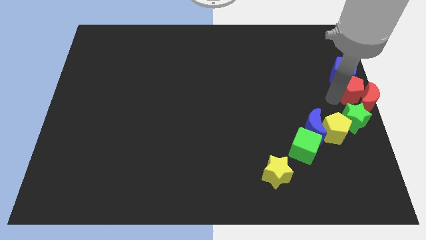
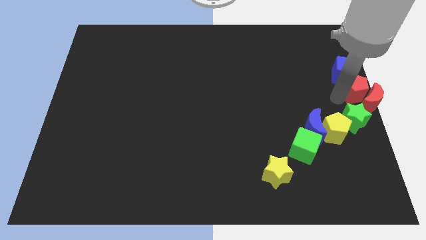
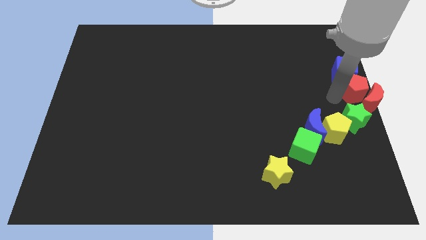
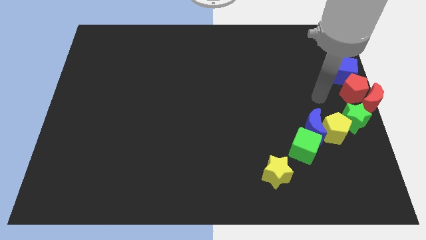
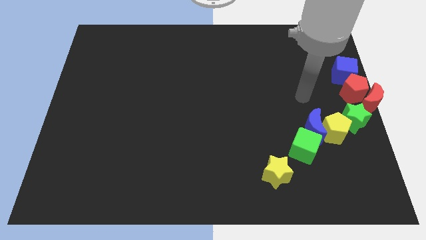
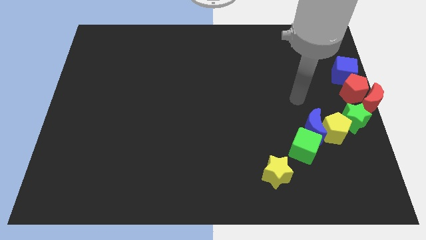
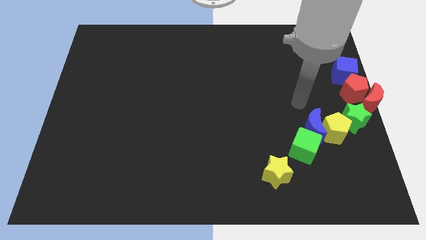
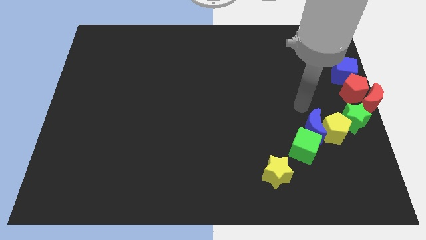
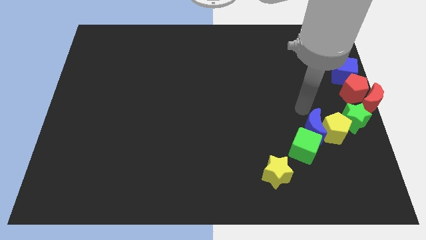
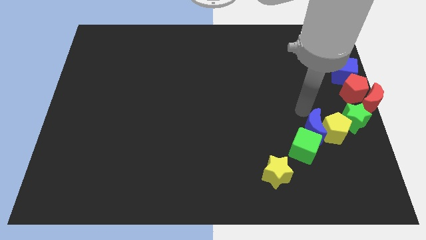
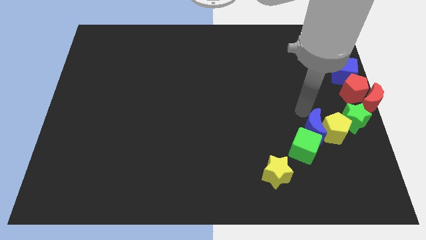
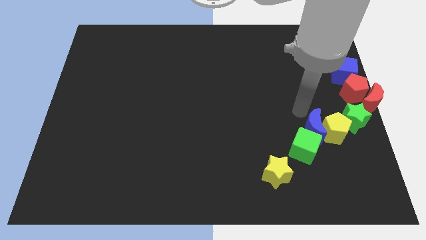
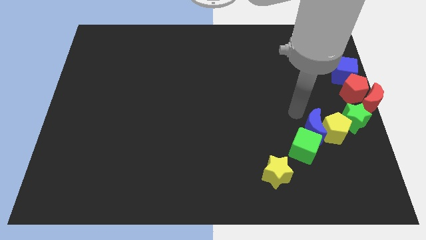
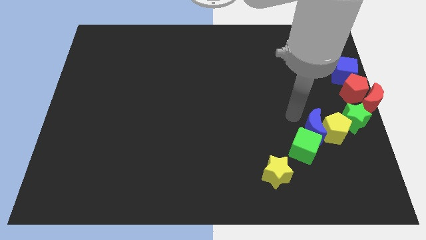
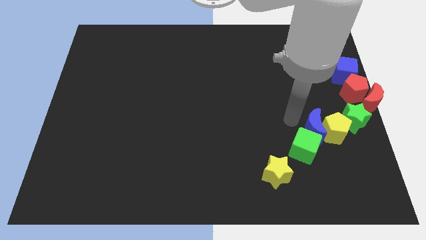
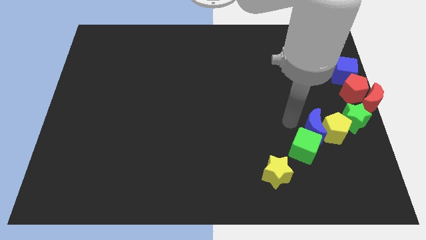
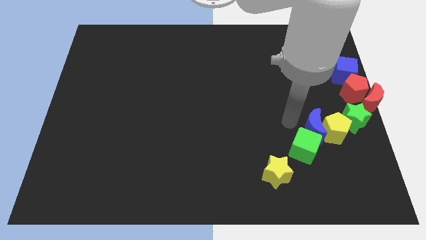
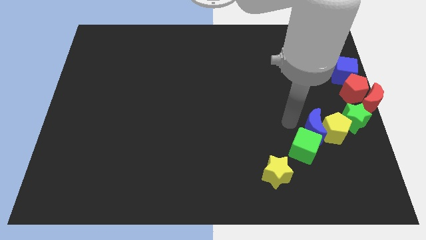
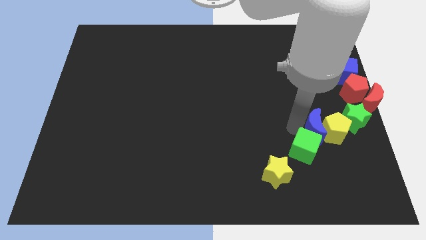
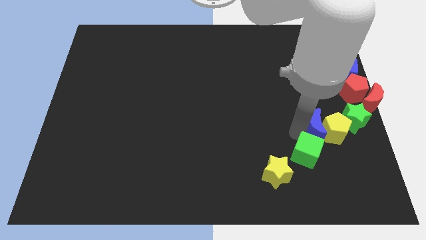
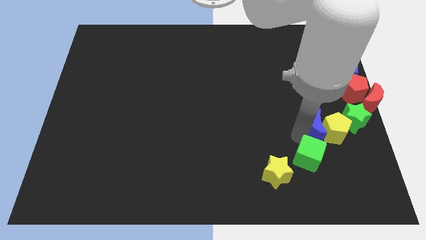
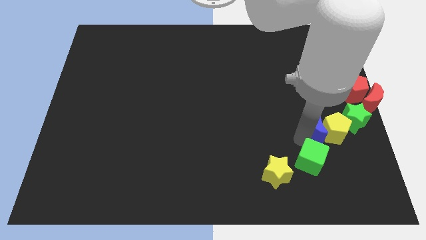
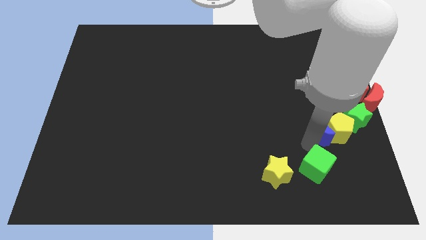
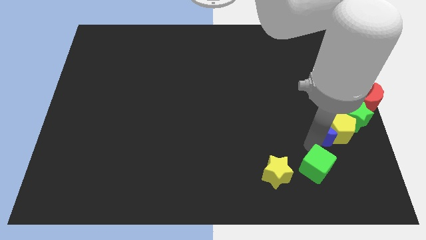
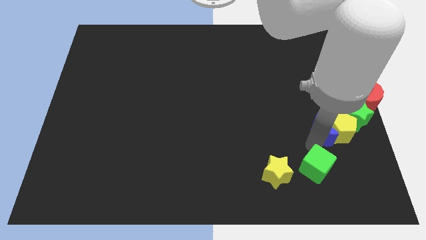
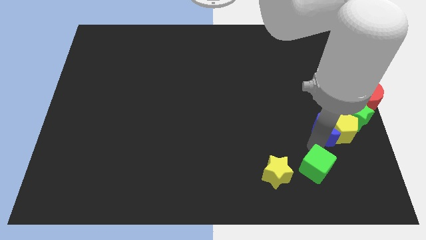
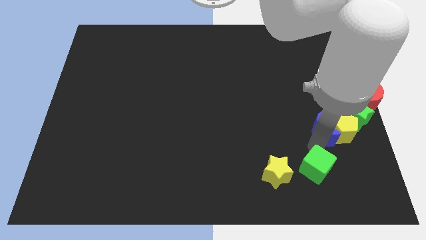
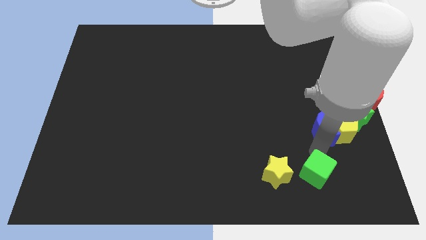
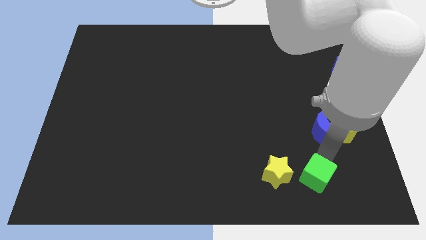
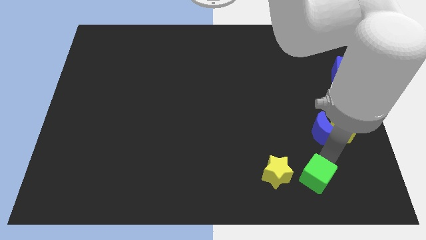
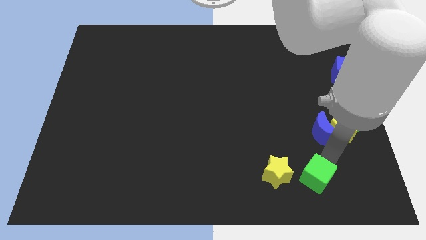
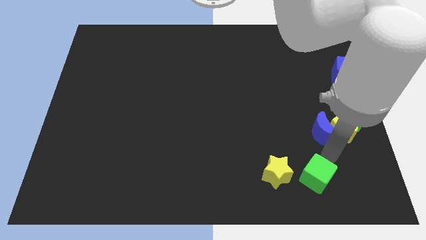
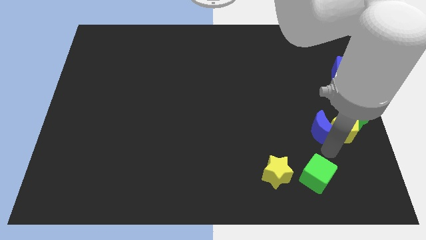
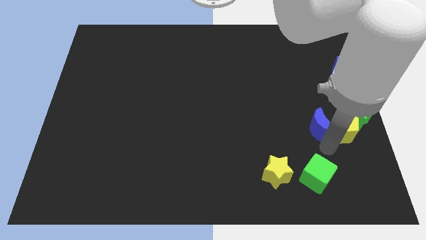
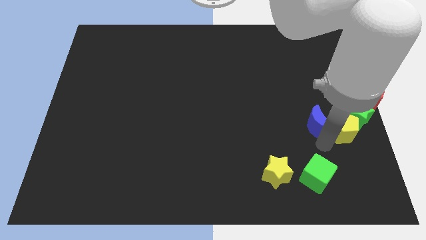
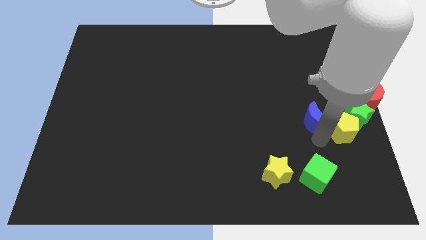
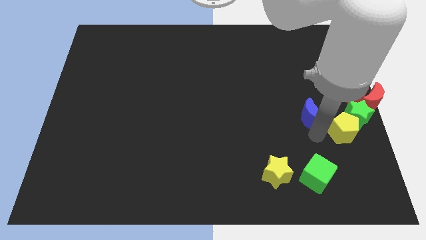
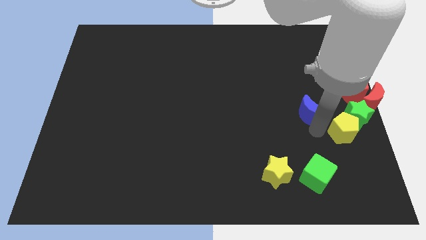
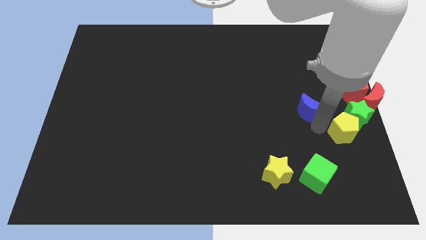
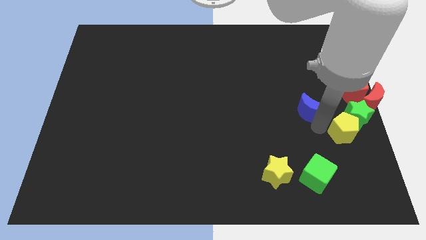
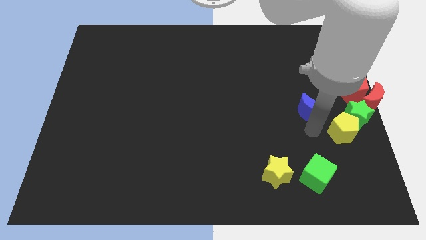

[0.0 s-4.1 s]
separate blue moon from the green cube

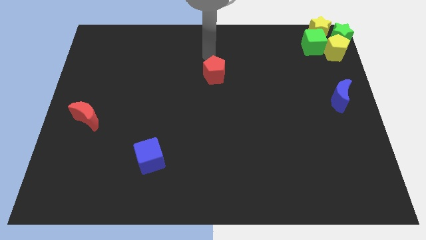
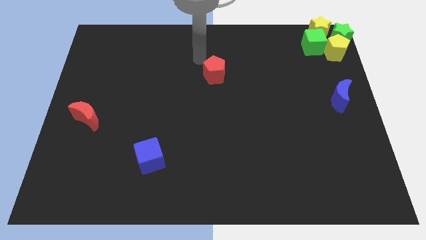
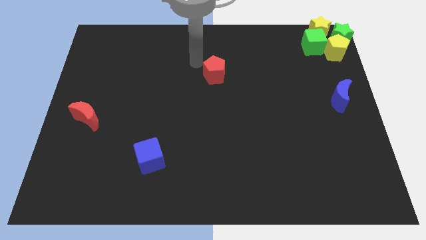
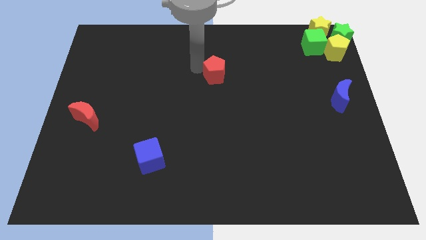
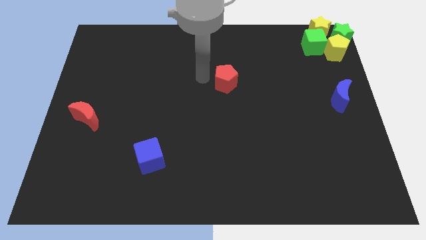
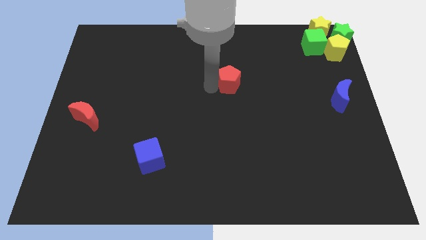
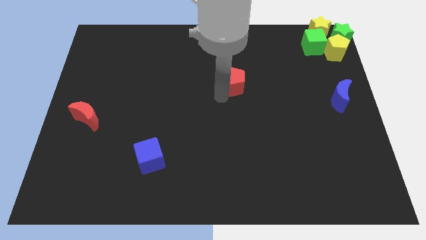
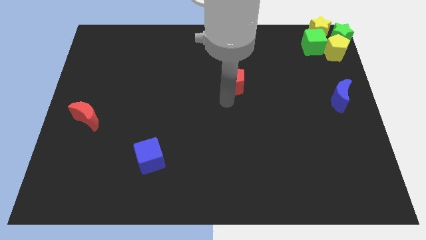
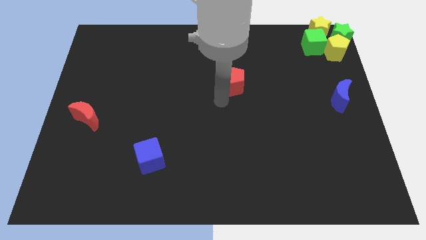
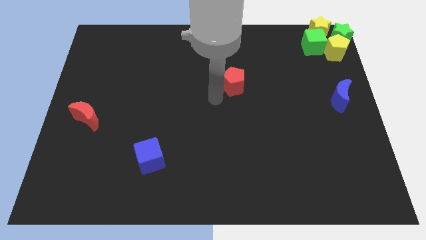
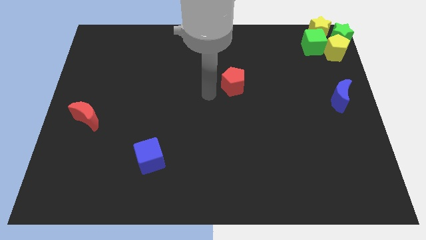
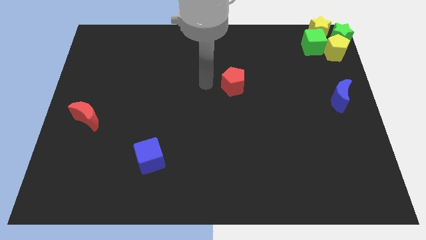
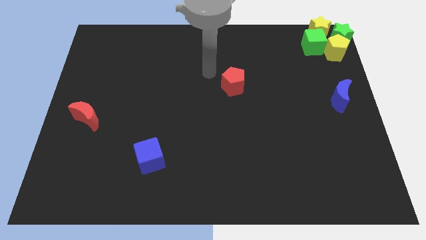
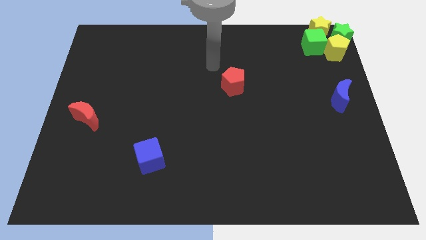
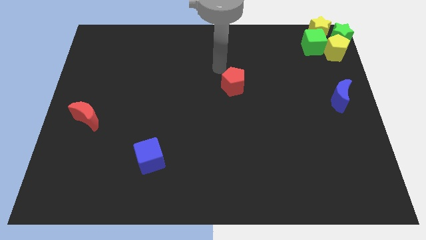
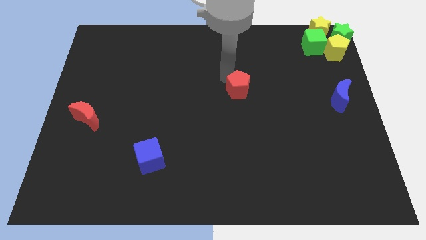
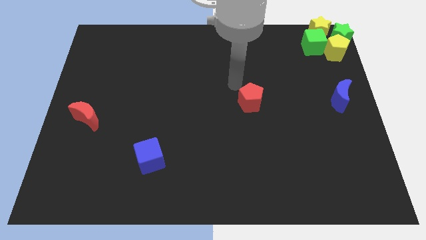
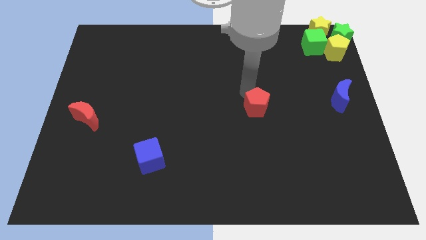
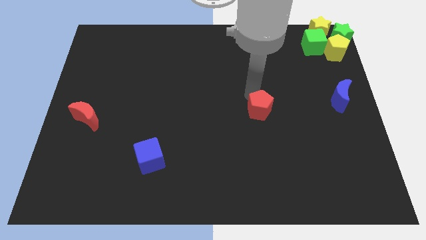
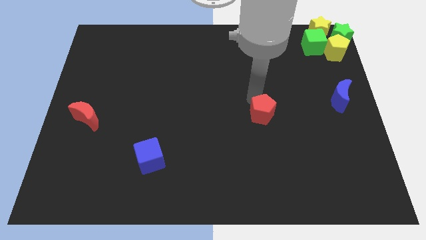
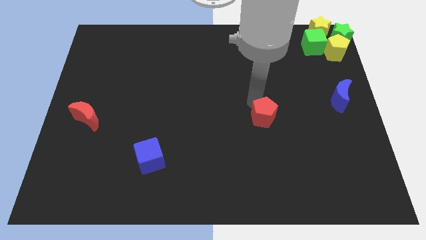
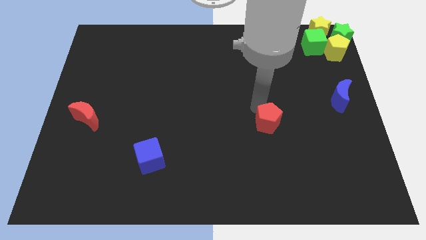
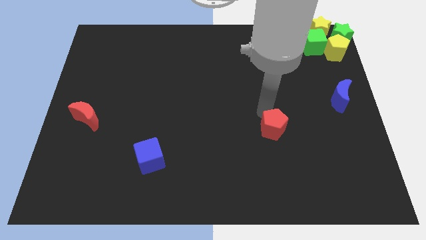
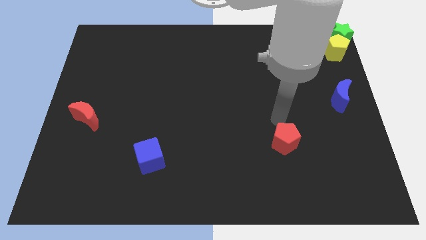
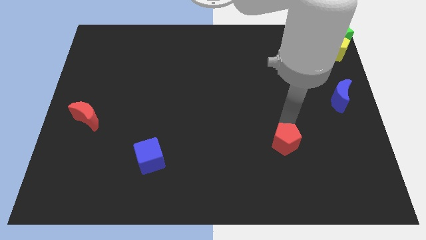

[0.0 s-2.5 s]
push the red pentagon slightly to the bottom right side of the board

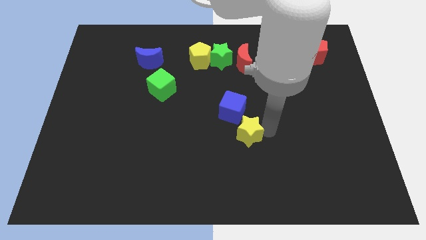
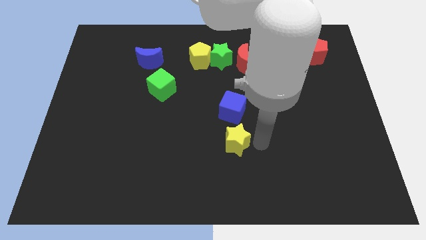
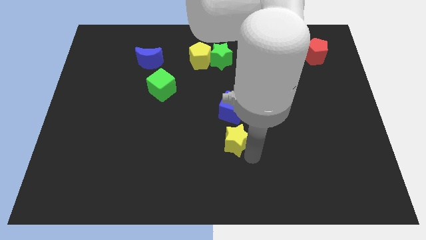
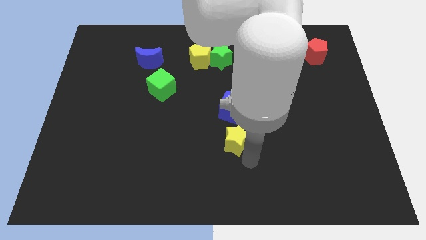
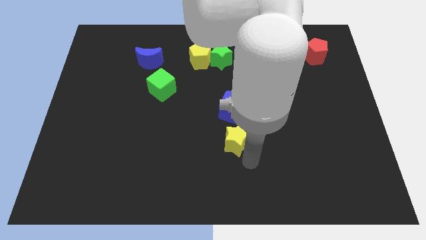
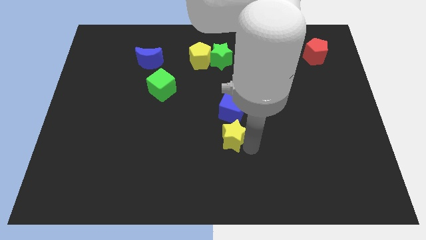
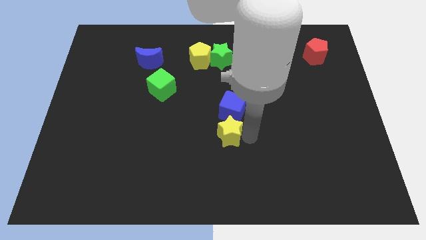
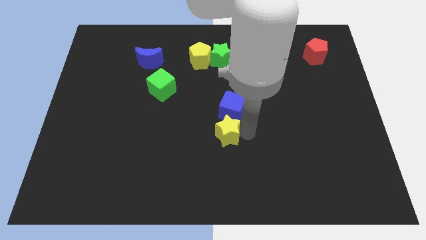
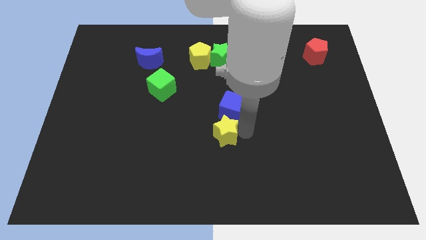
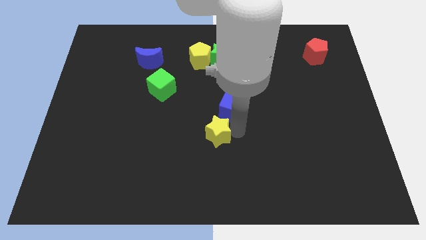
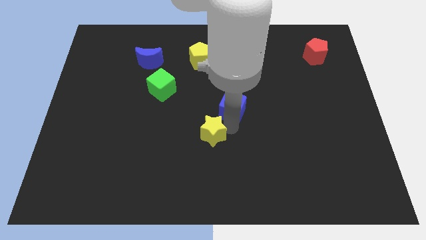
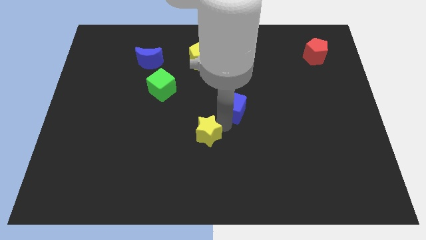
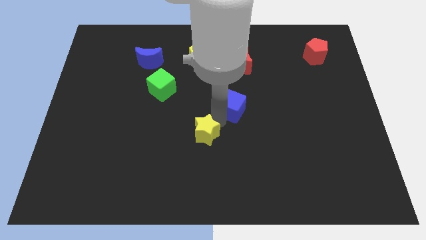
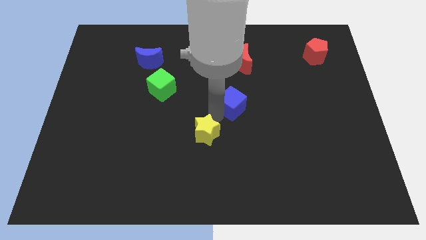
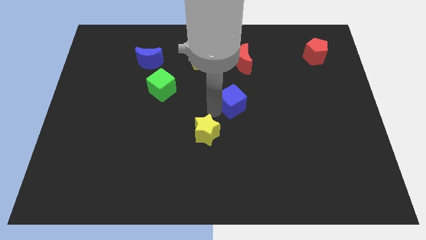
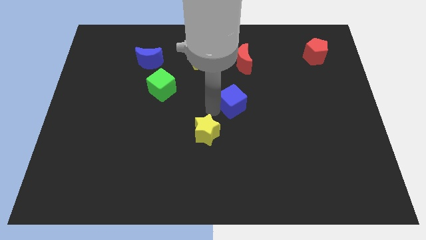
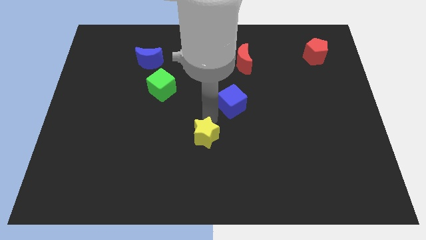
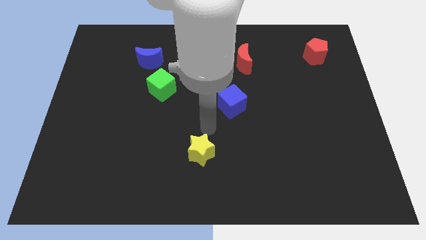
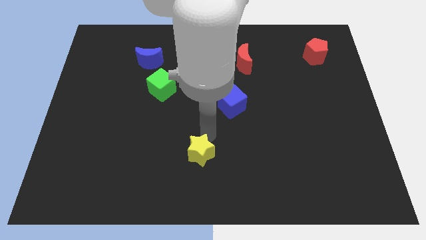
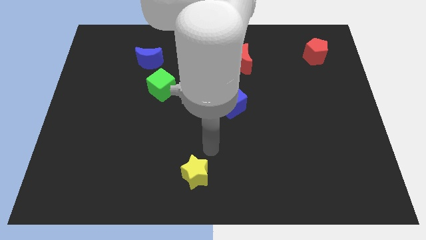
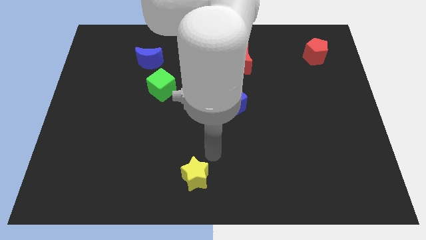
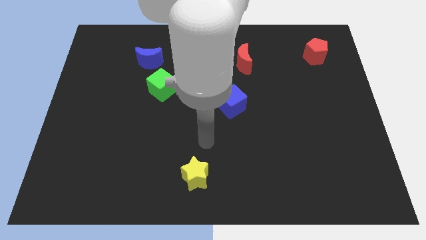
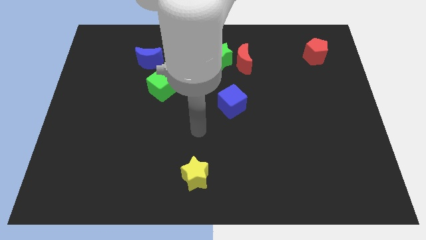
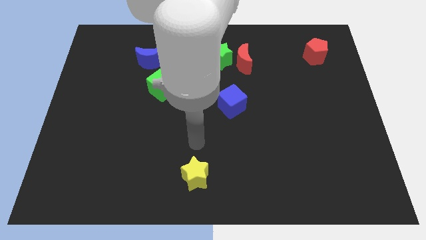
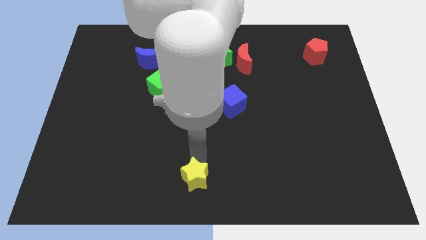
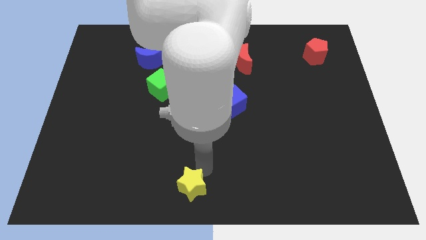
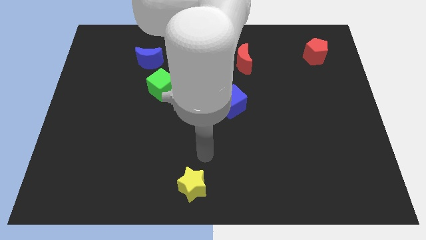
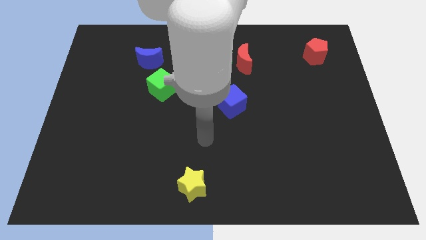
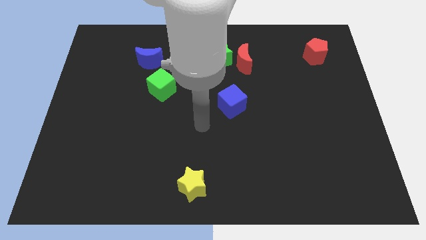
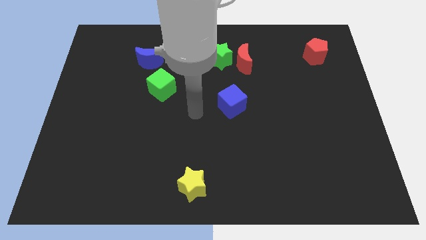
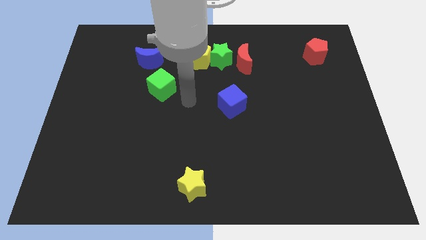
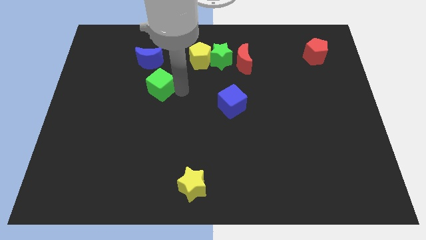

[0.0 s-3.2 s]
push the yellow star towards the bottom centre of the board
